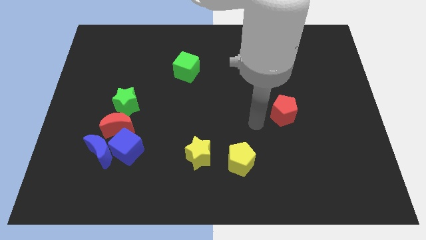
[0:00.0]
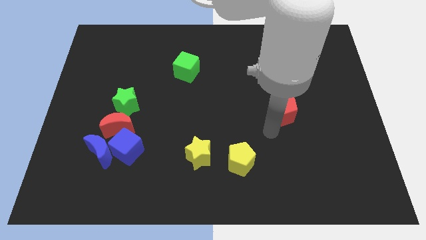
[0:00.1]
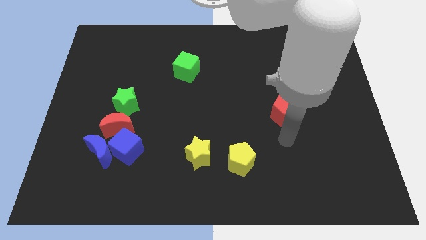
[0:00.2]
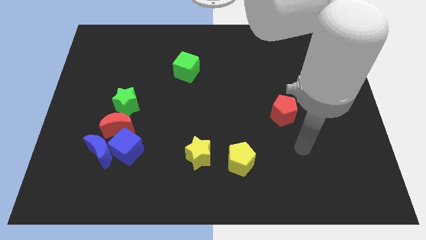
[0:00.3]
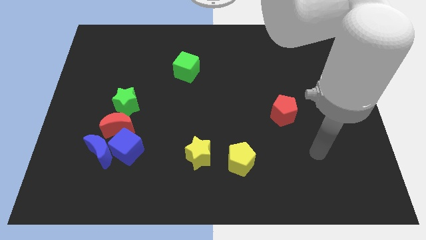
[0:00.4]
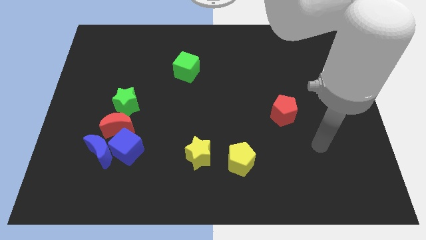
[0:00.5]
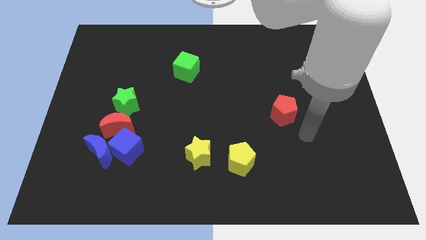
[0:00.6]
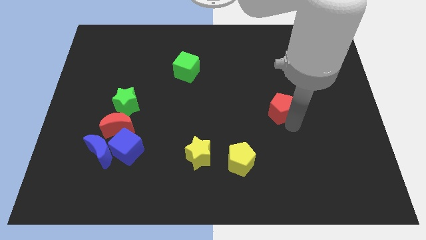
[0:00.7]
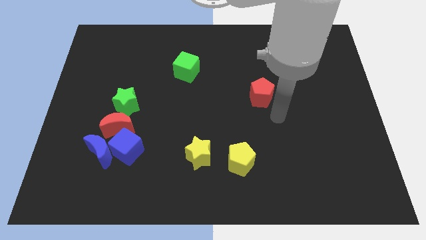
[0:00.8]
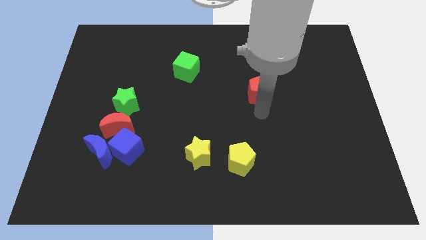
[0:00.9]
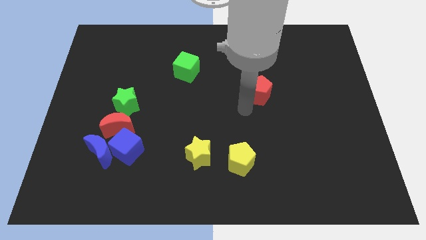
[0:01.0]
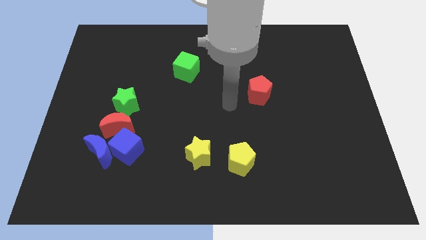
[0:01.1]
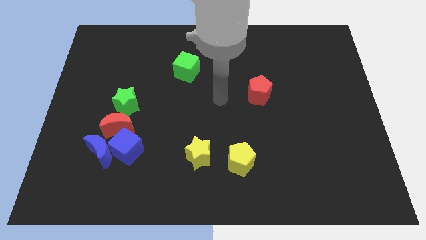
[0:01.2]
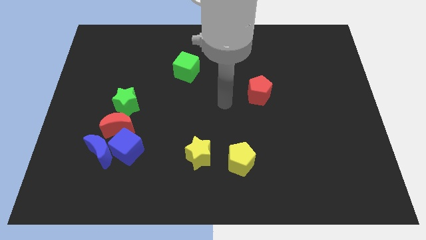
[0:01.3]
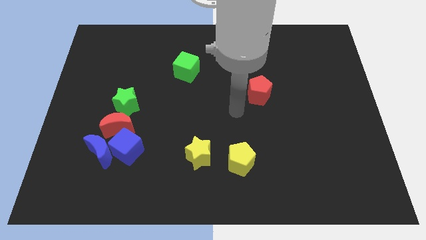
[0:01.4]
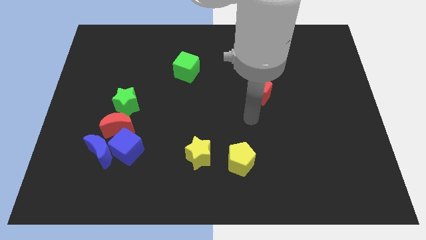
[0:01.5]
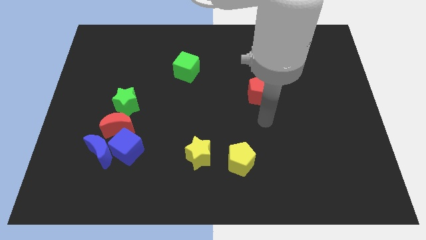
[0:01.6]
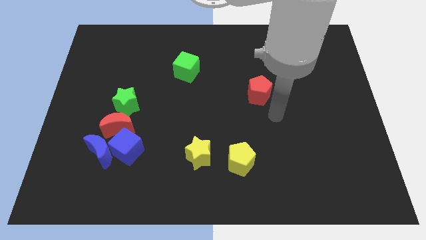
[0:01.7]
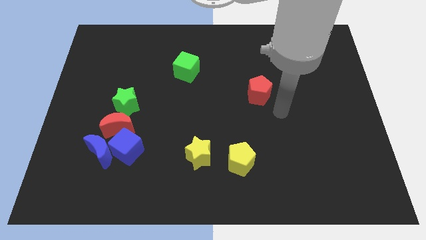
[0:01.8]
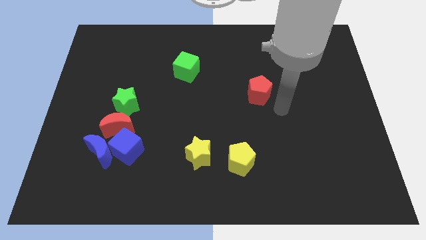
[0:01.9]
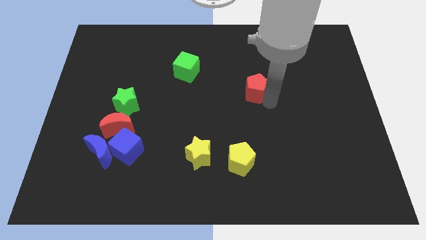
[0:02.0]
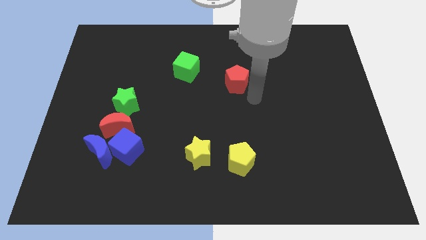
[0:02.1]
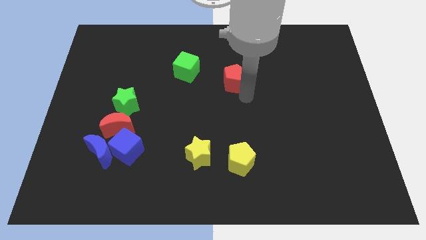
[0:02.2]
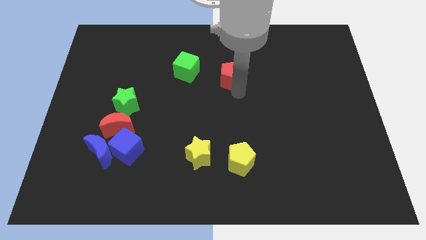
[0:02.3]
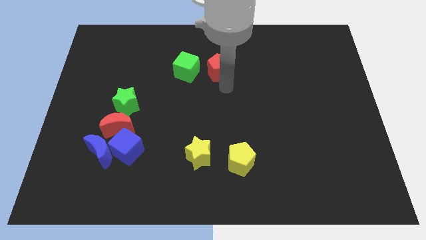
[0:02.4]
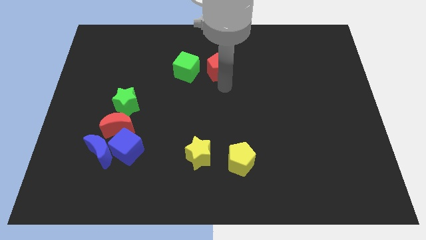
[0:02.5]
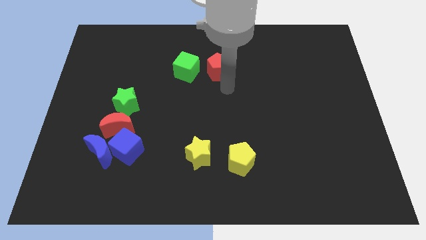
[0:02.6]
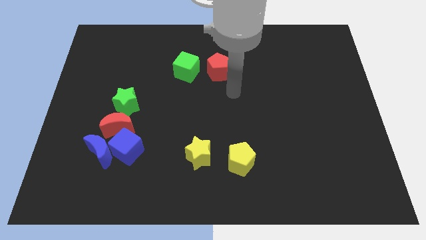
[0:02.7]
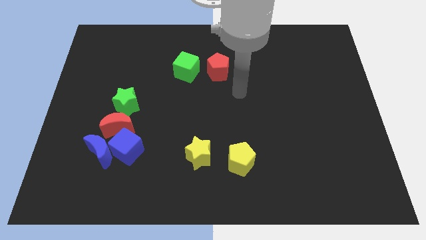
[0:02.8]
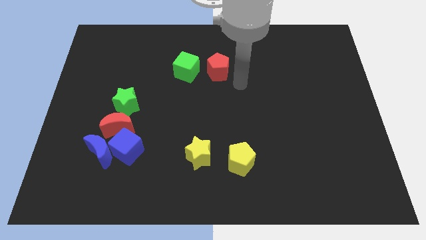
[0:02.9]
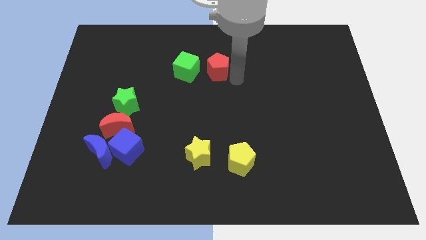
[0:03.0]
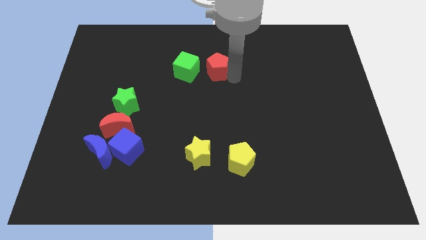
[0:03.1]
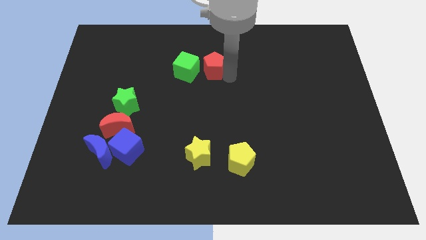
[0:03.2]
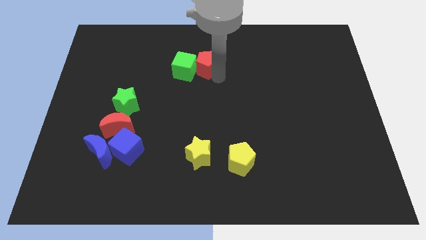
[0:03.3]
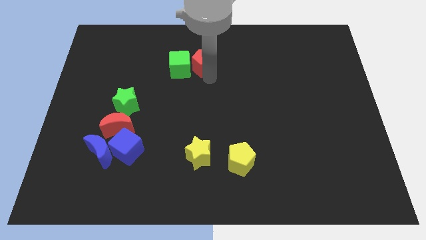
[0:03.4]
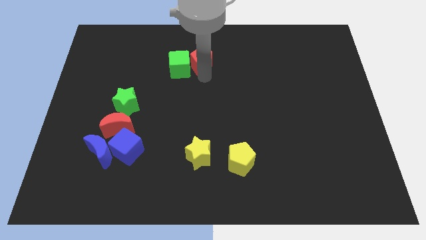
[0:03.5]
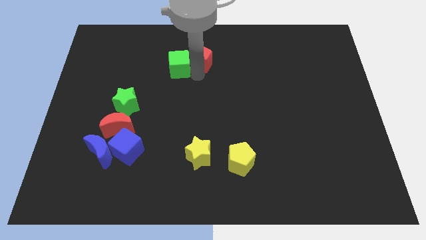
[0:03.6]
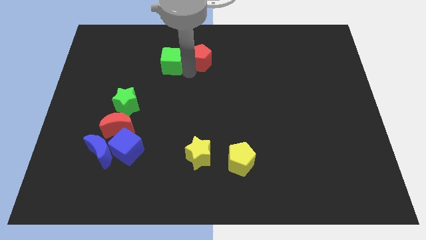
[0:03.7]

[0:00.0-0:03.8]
push the red pentagon close to the right side of the green cube

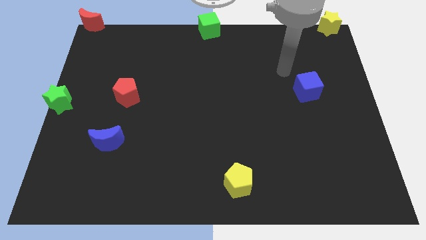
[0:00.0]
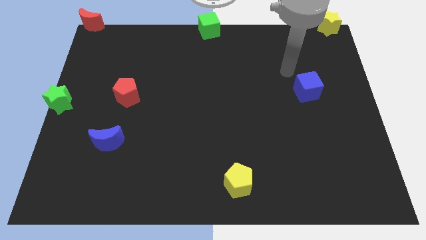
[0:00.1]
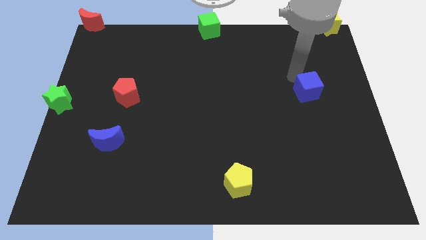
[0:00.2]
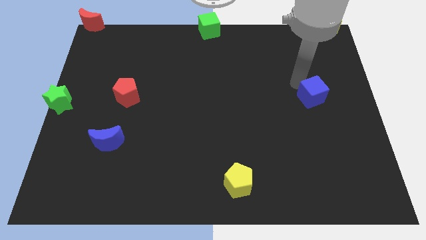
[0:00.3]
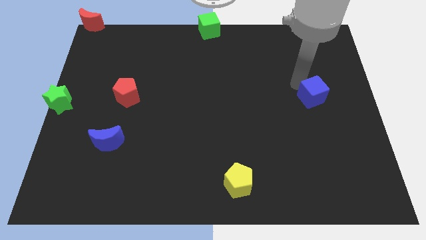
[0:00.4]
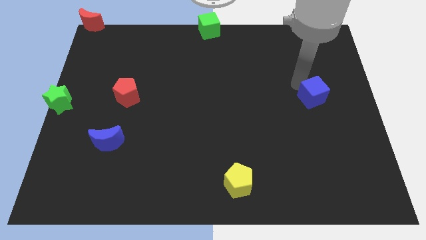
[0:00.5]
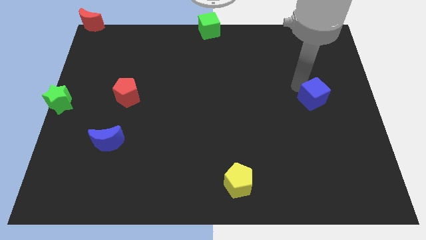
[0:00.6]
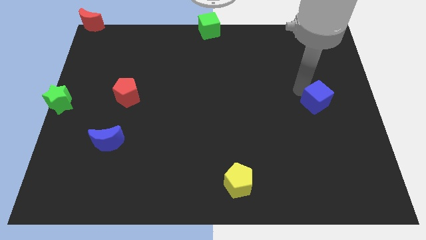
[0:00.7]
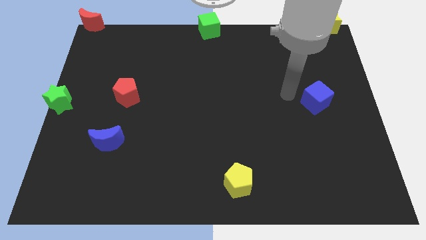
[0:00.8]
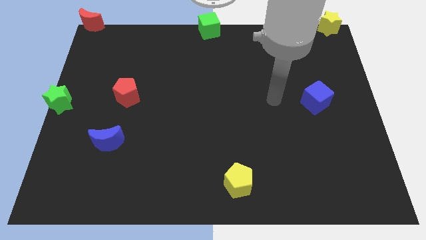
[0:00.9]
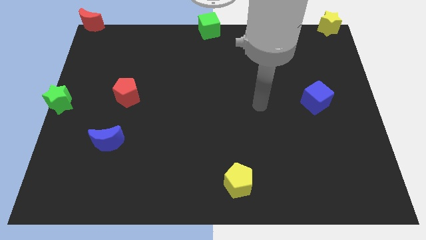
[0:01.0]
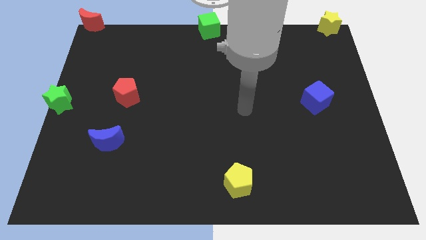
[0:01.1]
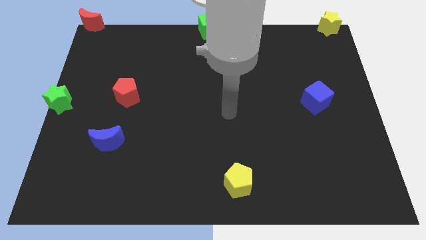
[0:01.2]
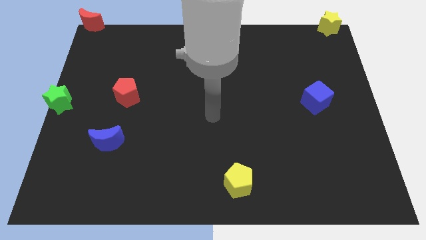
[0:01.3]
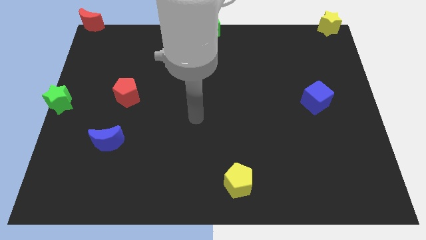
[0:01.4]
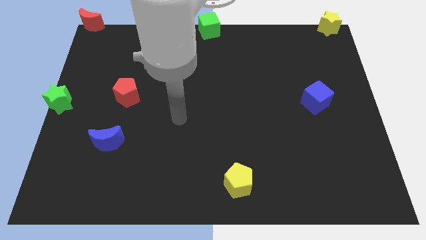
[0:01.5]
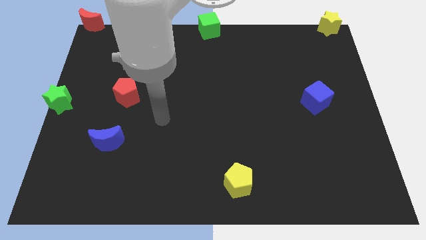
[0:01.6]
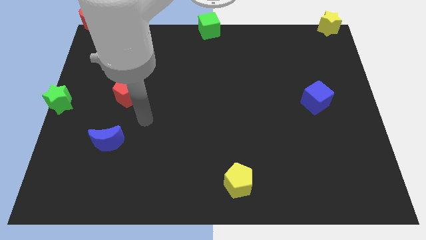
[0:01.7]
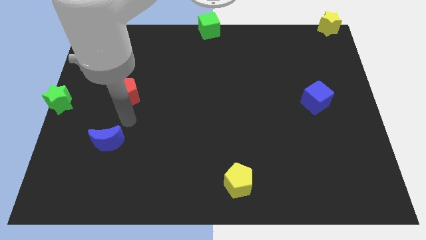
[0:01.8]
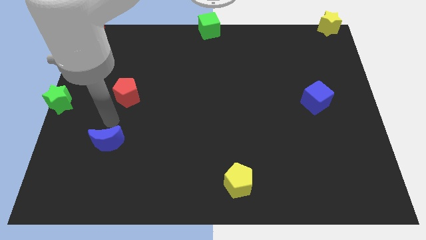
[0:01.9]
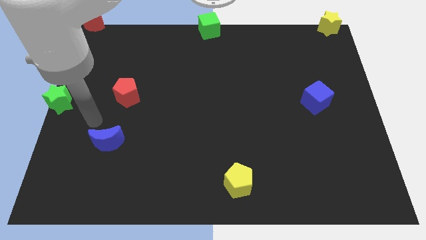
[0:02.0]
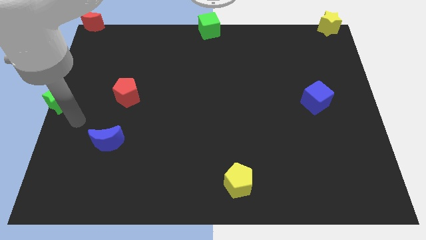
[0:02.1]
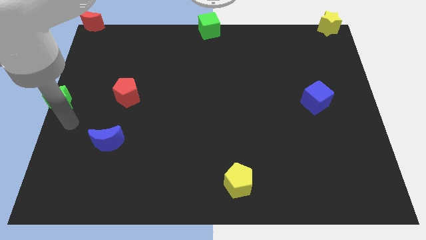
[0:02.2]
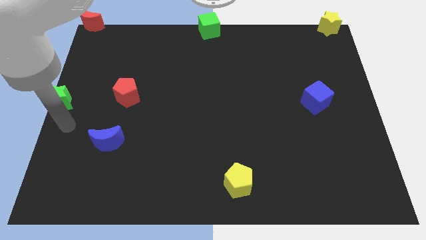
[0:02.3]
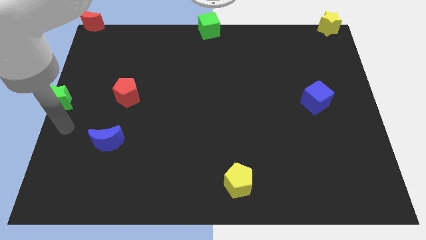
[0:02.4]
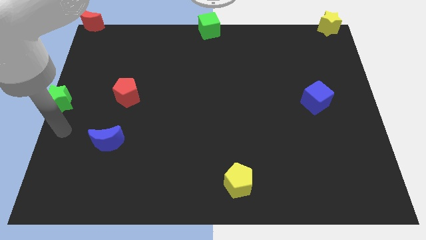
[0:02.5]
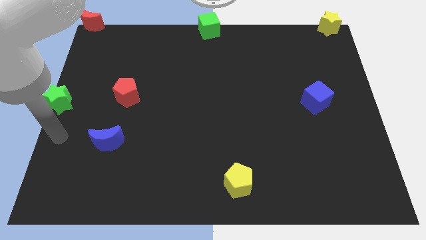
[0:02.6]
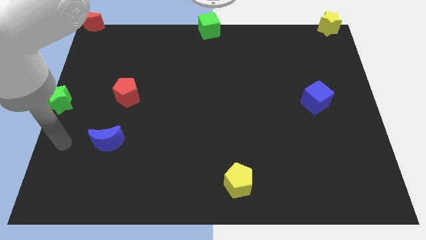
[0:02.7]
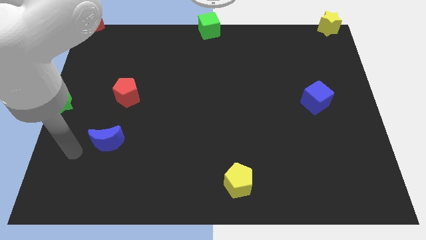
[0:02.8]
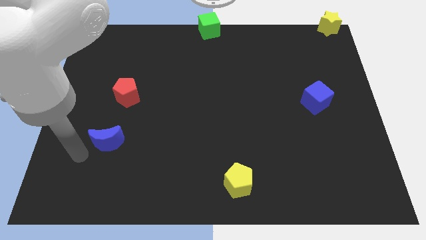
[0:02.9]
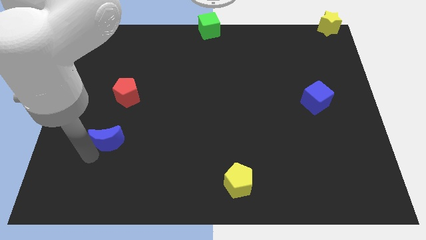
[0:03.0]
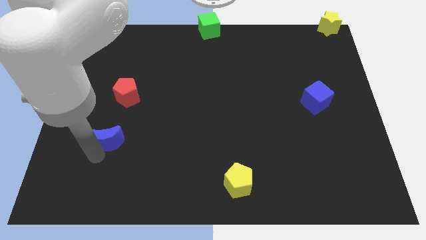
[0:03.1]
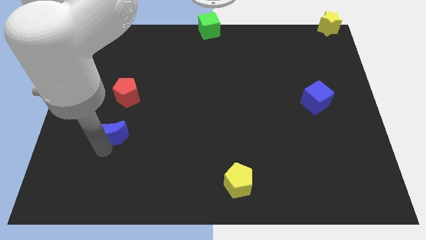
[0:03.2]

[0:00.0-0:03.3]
slightly push the blue cube towards the right center of the board

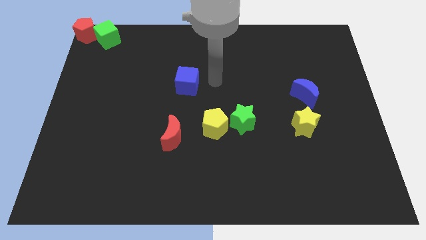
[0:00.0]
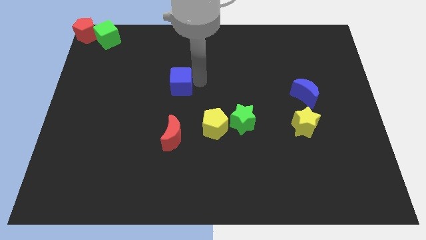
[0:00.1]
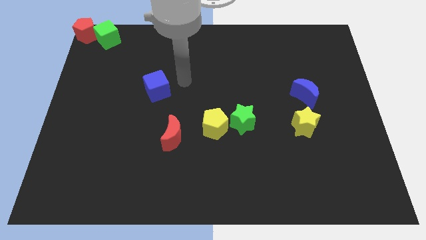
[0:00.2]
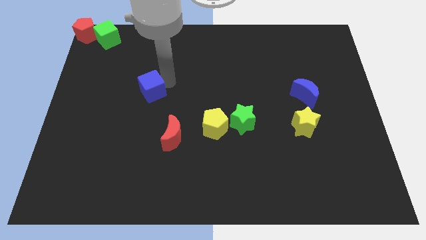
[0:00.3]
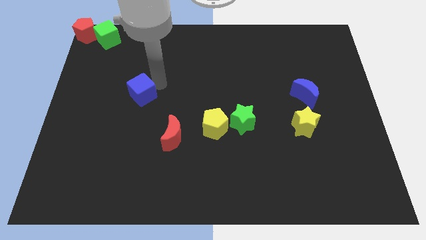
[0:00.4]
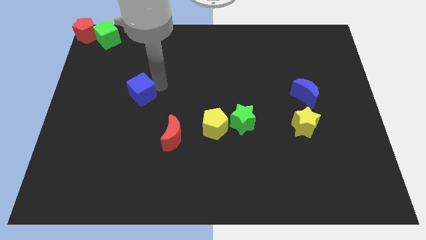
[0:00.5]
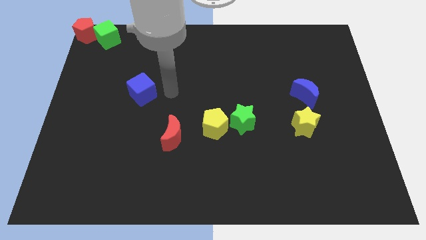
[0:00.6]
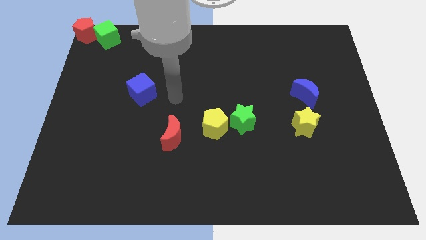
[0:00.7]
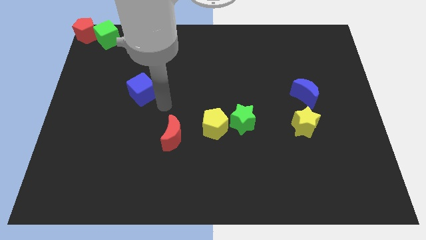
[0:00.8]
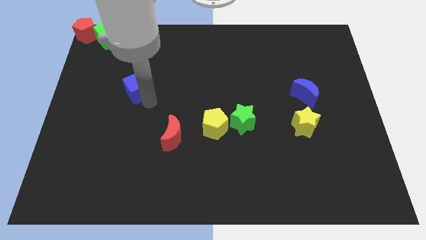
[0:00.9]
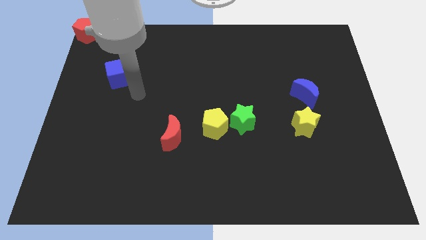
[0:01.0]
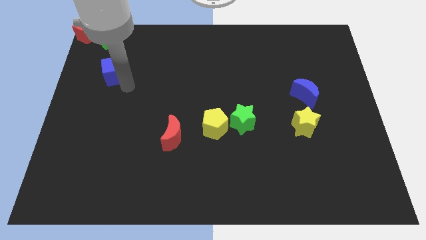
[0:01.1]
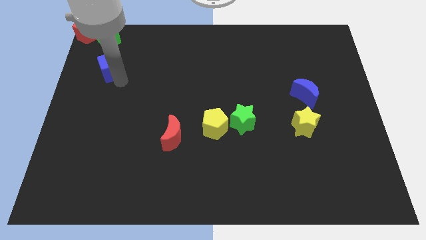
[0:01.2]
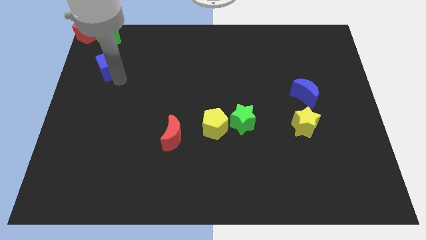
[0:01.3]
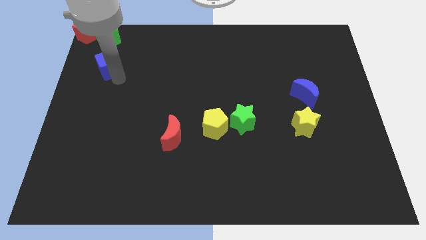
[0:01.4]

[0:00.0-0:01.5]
place the blue cube to the bottom side of the green cube

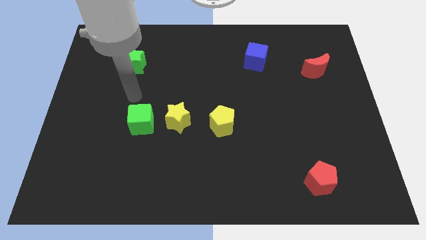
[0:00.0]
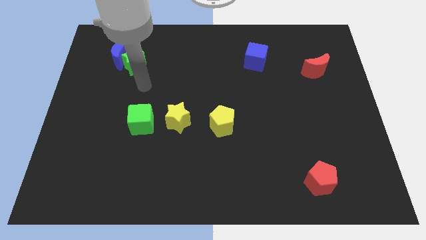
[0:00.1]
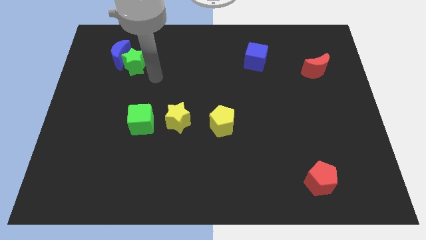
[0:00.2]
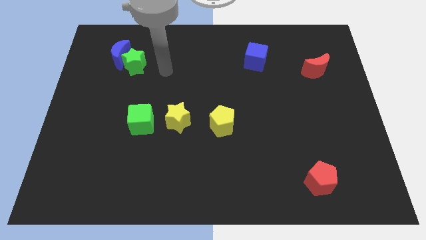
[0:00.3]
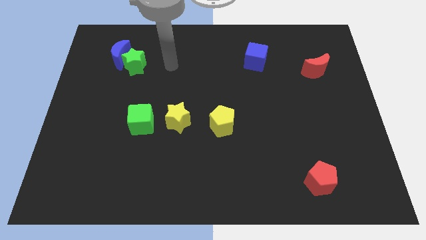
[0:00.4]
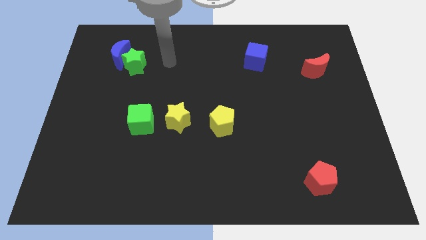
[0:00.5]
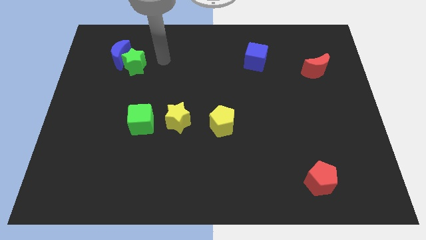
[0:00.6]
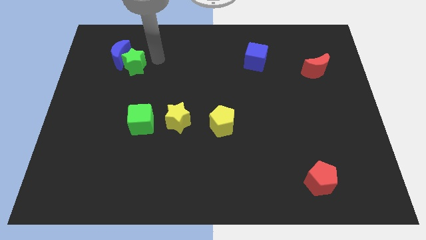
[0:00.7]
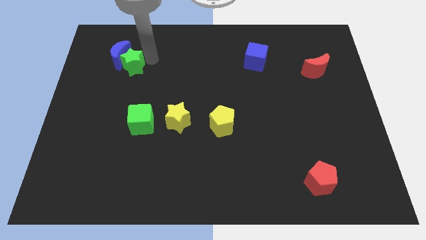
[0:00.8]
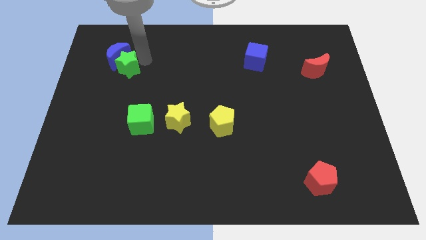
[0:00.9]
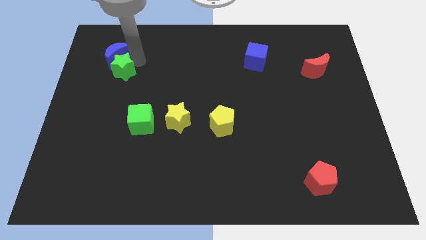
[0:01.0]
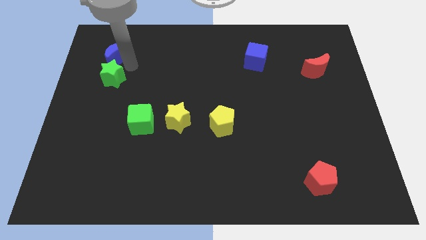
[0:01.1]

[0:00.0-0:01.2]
move the green star slightly left
